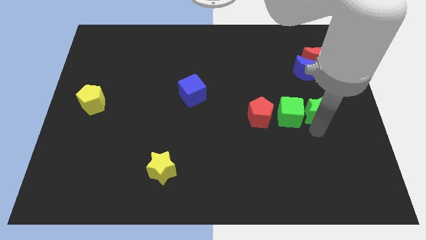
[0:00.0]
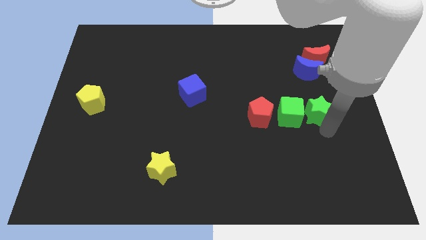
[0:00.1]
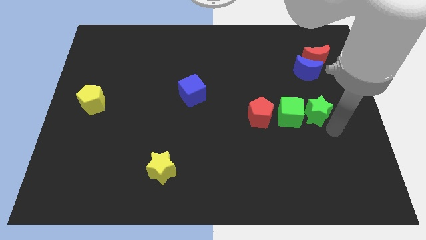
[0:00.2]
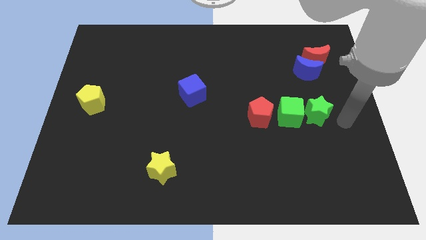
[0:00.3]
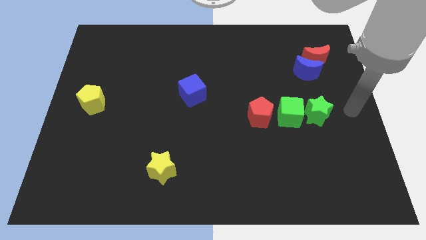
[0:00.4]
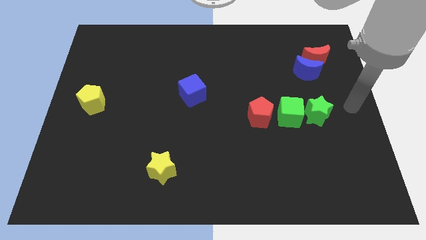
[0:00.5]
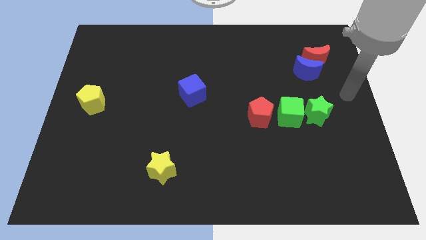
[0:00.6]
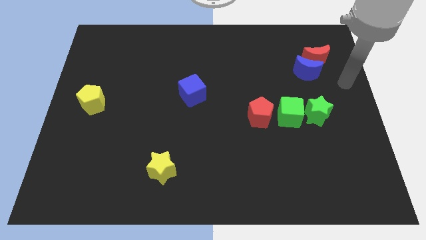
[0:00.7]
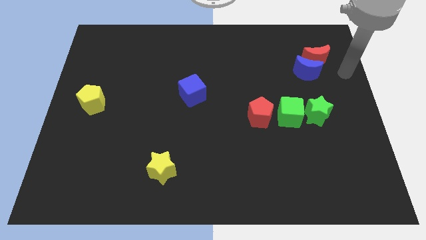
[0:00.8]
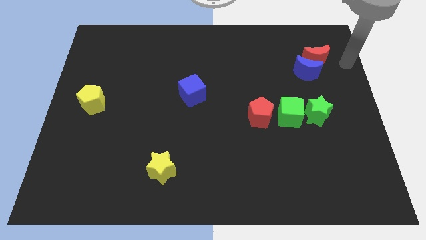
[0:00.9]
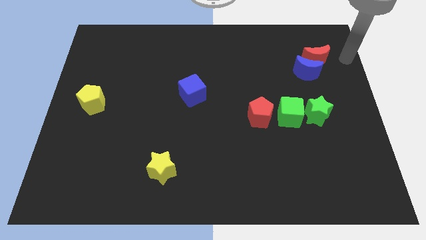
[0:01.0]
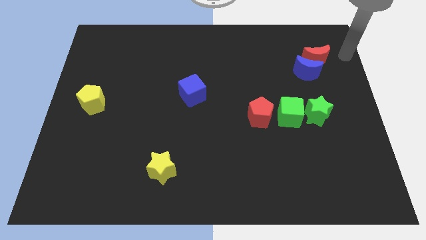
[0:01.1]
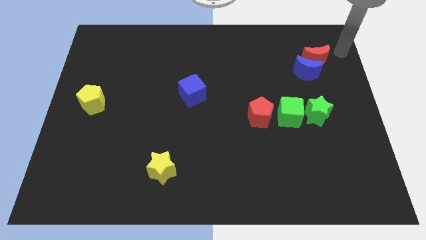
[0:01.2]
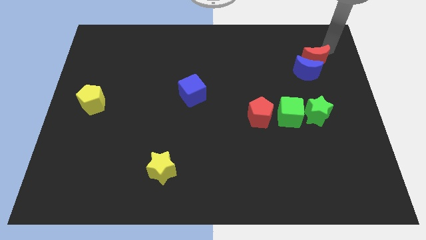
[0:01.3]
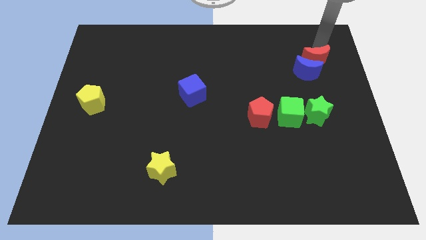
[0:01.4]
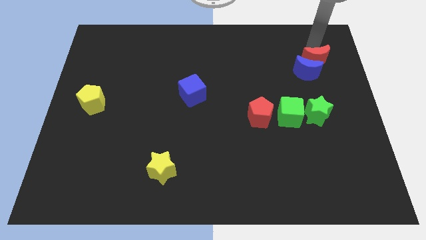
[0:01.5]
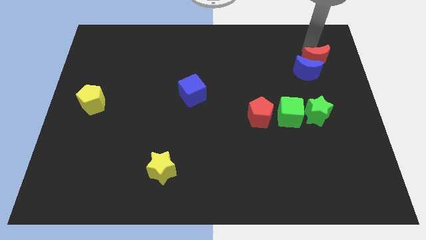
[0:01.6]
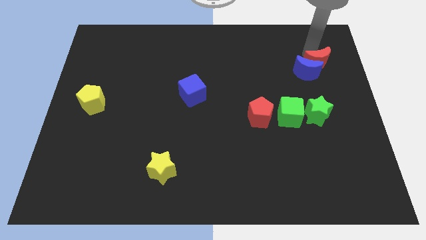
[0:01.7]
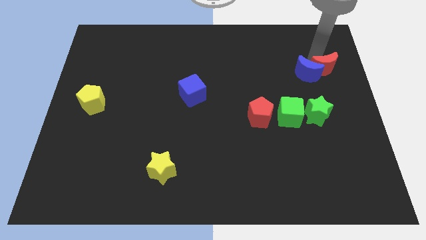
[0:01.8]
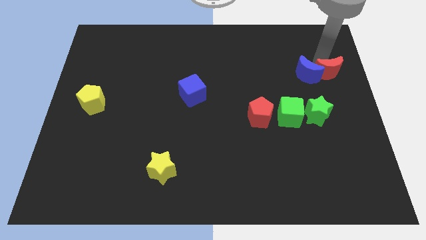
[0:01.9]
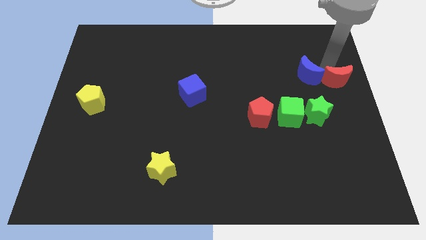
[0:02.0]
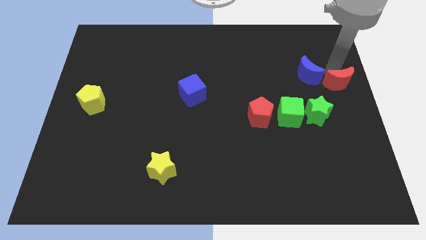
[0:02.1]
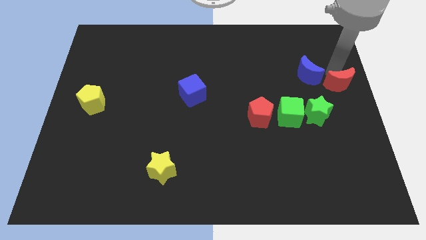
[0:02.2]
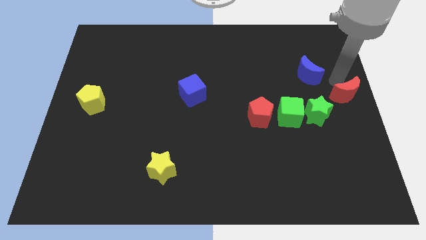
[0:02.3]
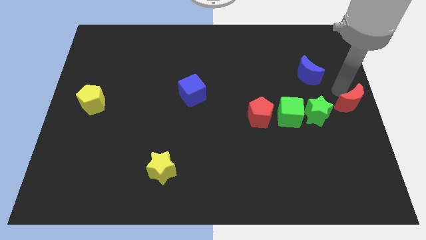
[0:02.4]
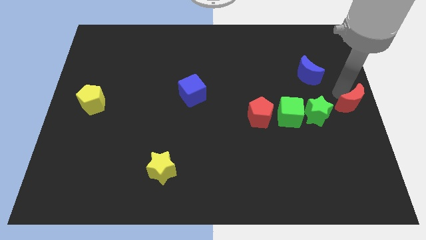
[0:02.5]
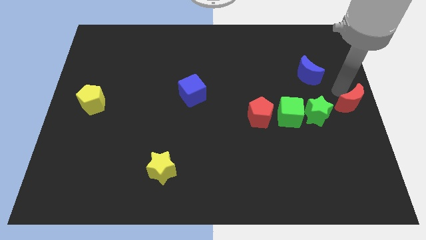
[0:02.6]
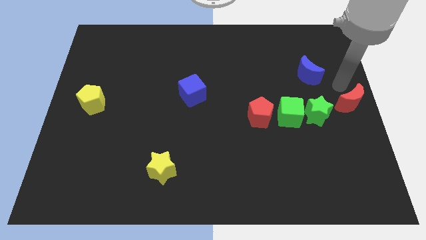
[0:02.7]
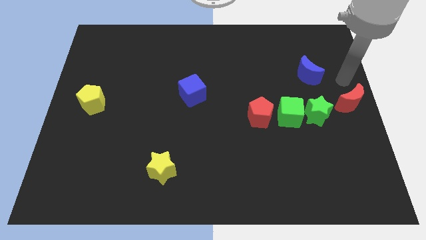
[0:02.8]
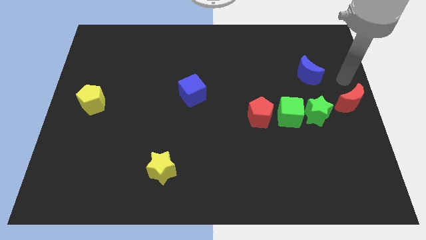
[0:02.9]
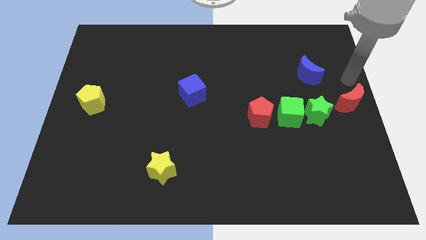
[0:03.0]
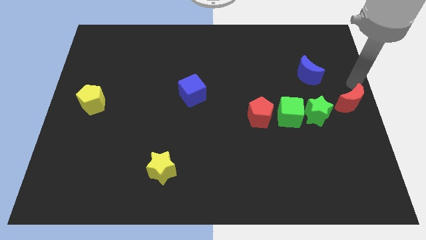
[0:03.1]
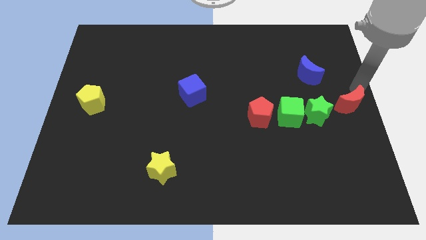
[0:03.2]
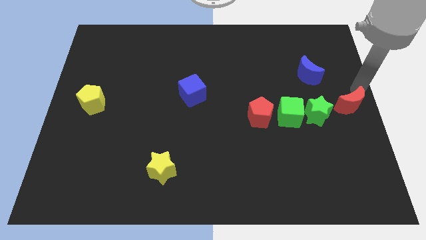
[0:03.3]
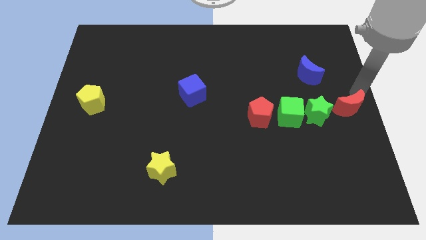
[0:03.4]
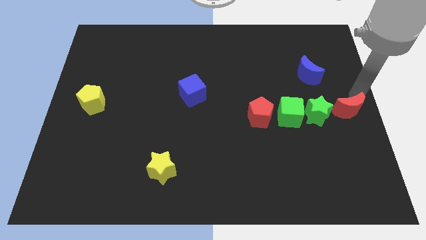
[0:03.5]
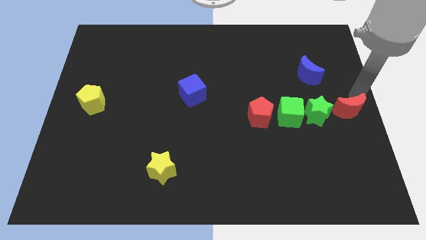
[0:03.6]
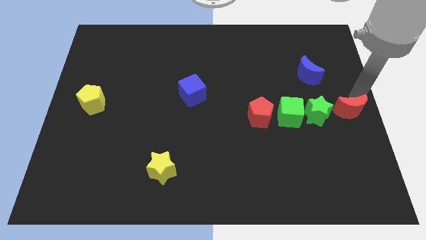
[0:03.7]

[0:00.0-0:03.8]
move the red crescent to the right of the green star

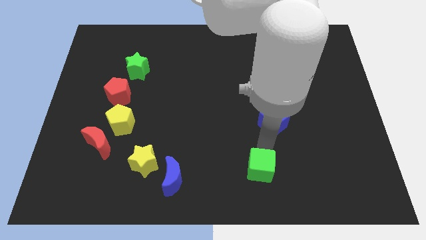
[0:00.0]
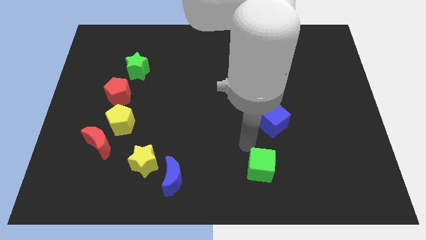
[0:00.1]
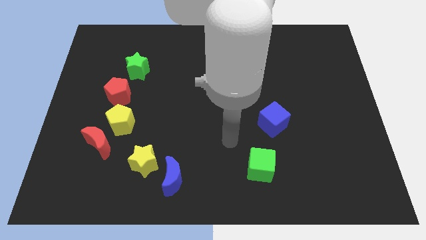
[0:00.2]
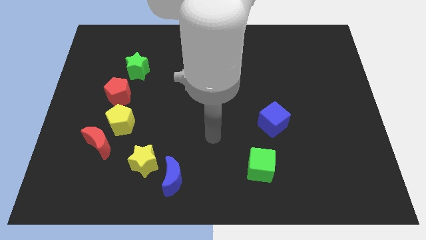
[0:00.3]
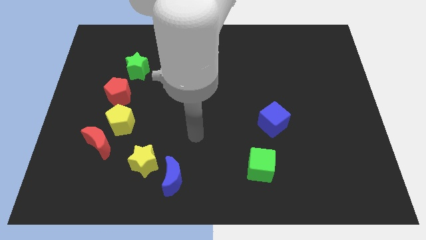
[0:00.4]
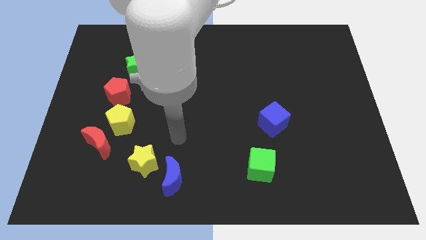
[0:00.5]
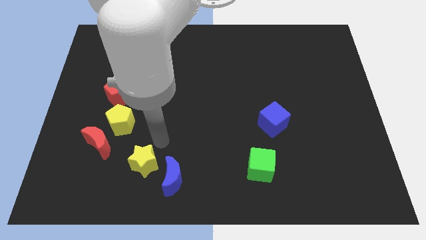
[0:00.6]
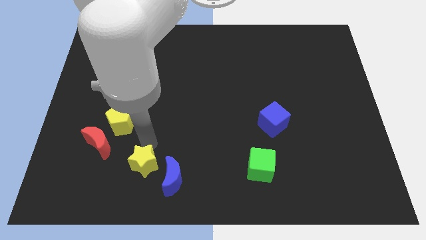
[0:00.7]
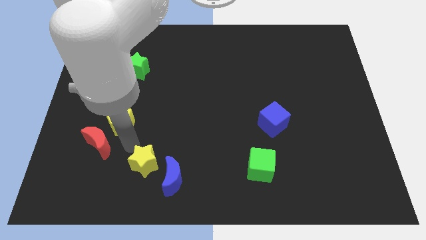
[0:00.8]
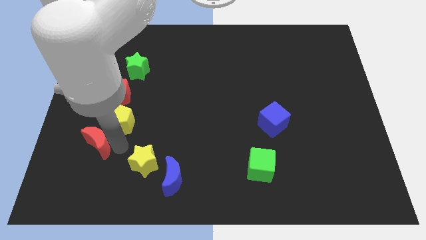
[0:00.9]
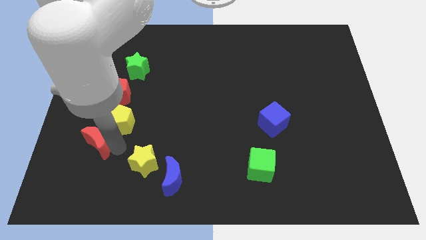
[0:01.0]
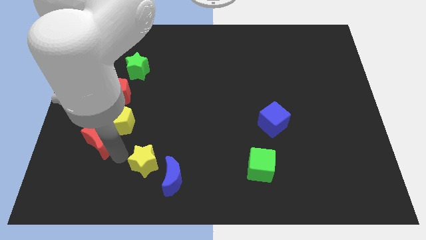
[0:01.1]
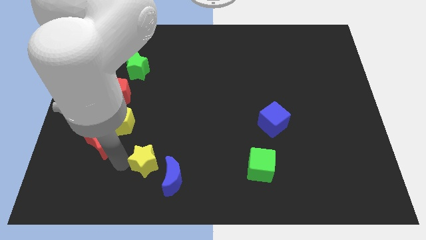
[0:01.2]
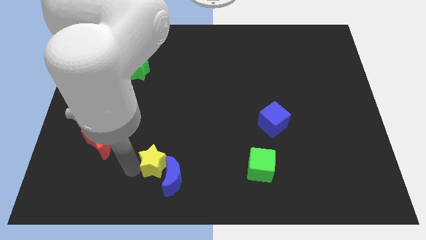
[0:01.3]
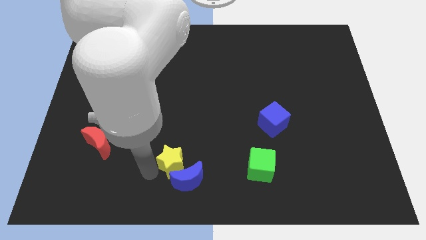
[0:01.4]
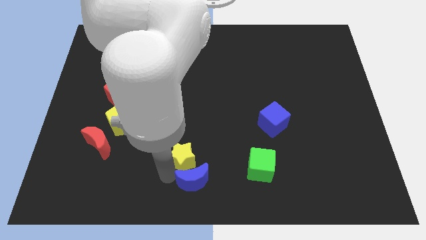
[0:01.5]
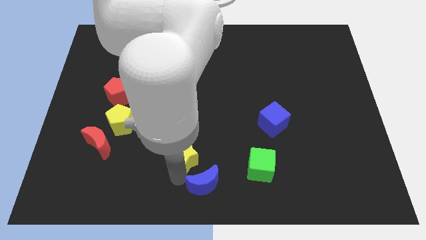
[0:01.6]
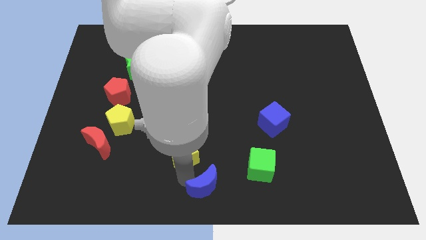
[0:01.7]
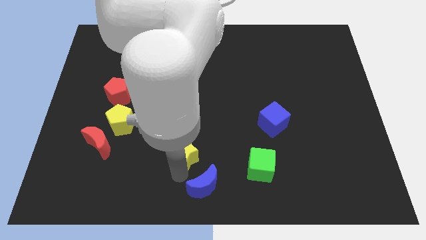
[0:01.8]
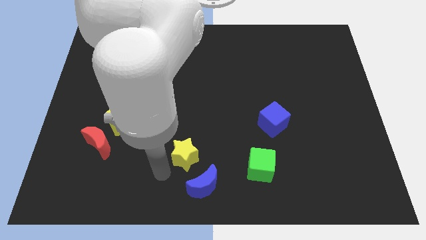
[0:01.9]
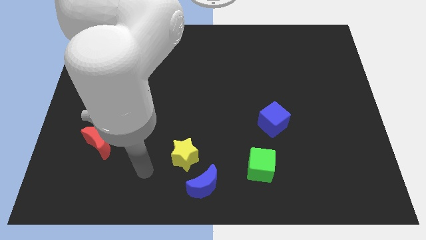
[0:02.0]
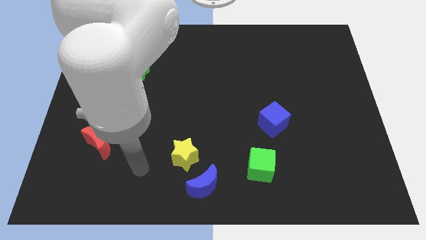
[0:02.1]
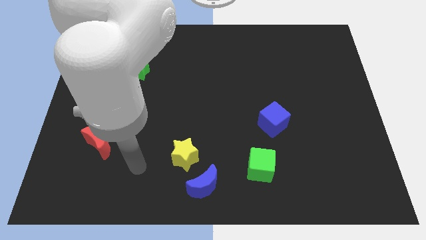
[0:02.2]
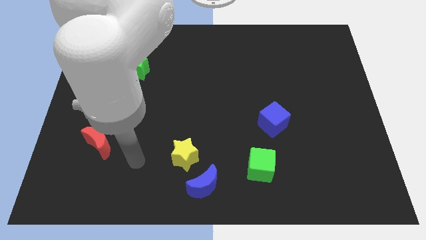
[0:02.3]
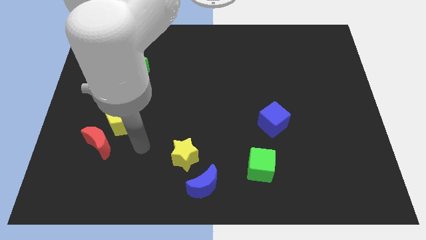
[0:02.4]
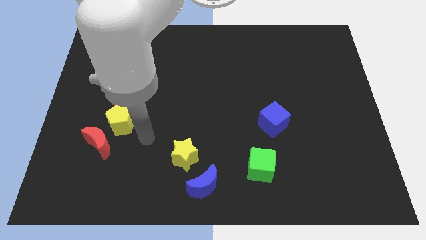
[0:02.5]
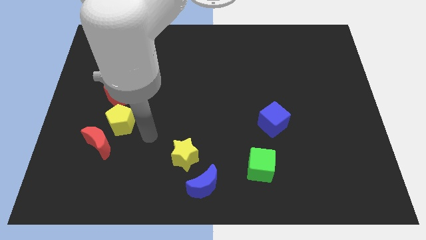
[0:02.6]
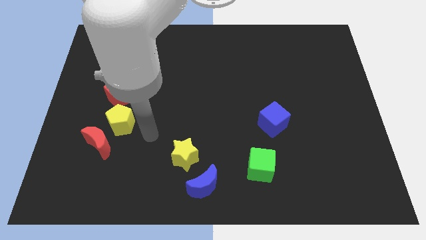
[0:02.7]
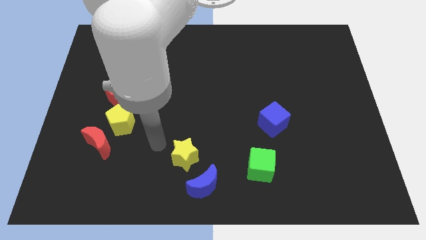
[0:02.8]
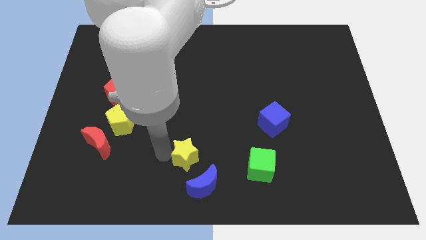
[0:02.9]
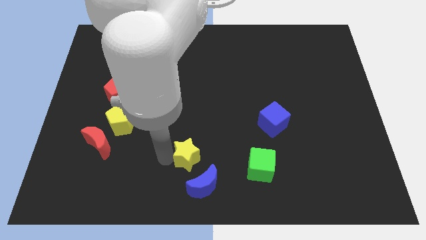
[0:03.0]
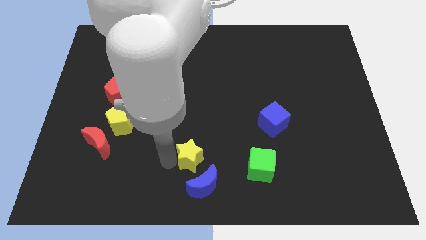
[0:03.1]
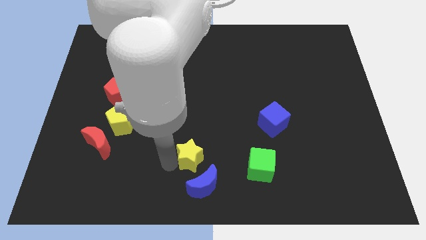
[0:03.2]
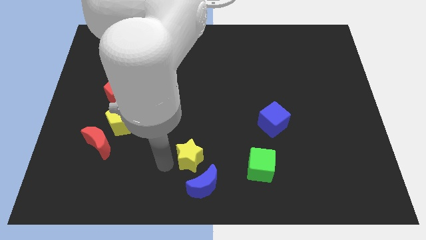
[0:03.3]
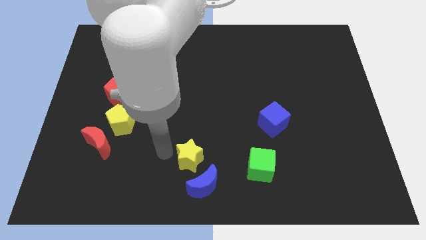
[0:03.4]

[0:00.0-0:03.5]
push the yellow star towards the right side

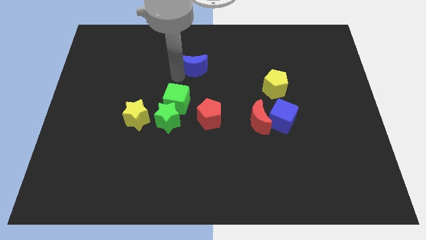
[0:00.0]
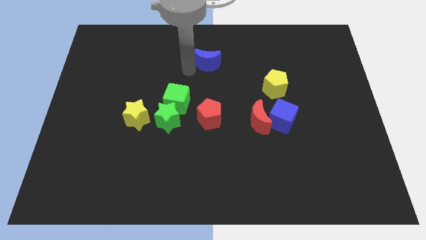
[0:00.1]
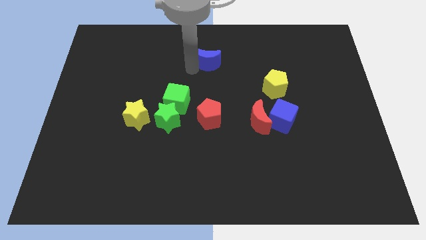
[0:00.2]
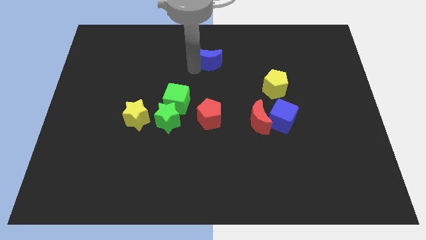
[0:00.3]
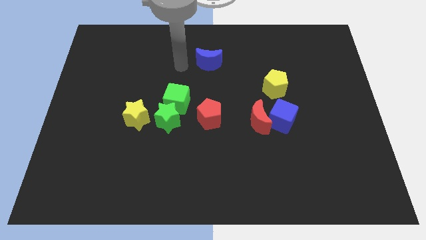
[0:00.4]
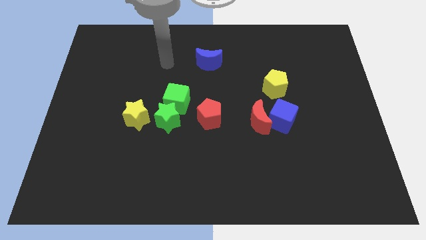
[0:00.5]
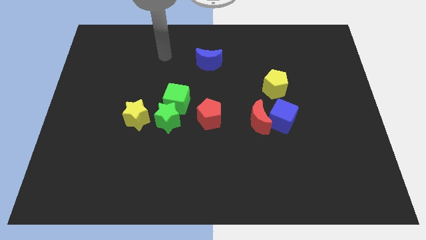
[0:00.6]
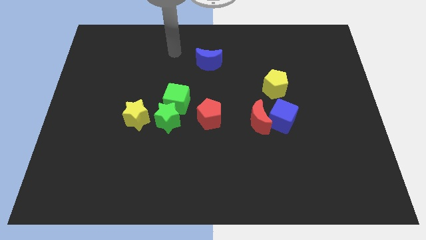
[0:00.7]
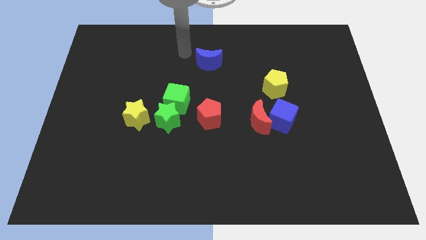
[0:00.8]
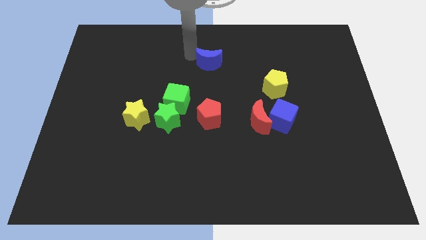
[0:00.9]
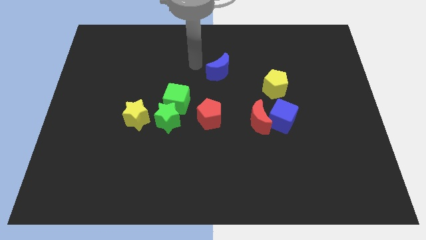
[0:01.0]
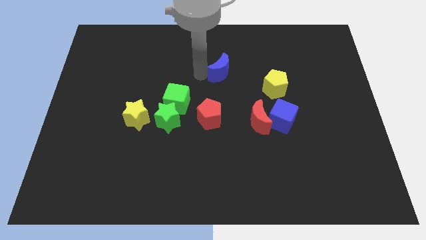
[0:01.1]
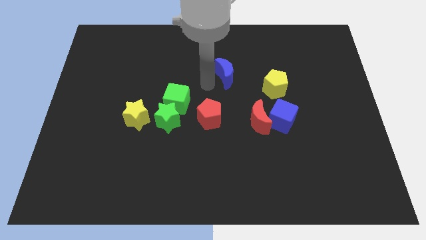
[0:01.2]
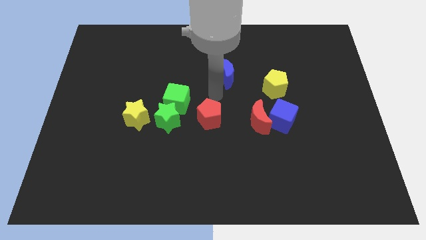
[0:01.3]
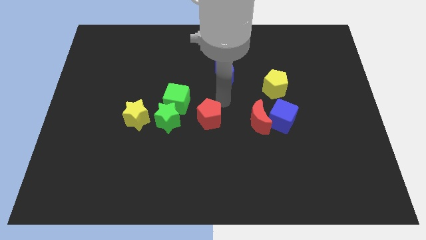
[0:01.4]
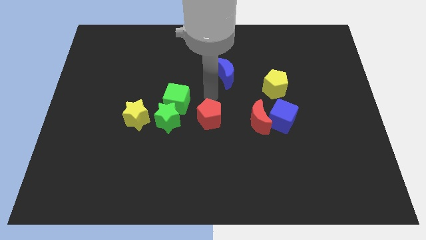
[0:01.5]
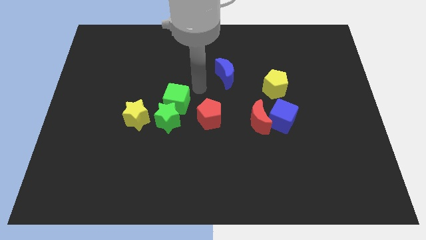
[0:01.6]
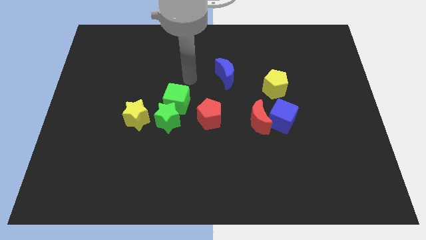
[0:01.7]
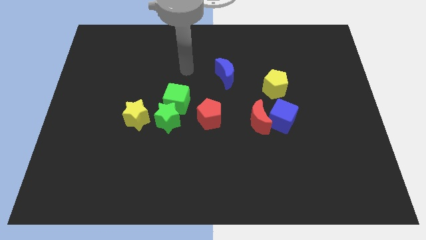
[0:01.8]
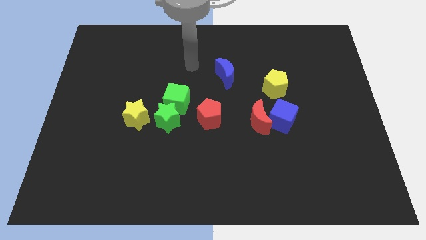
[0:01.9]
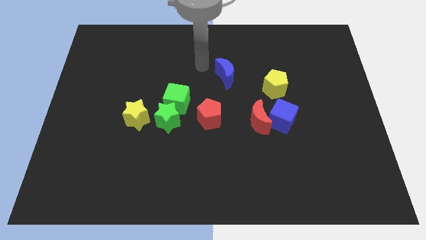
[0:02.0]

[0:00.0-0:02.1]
slide blue moon to the top left of yellow pentagon
